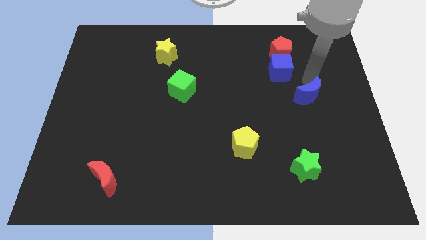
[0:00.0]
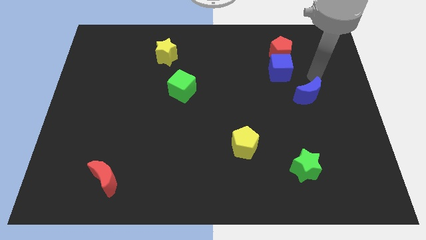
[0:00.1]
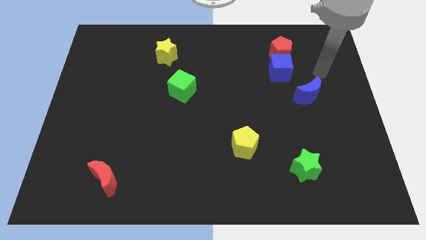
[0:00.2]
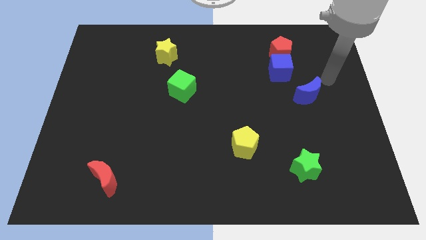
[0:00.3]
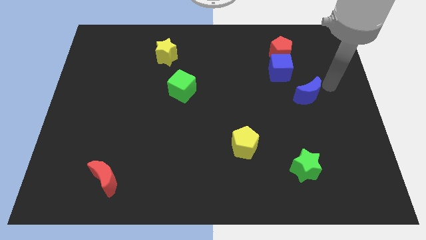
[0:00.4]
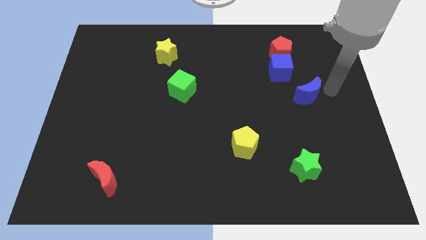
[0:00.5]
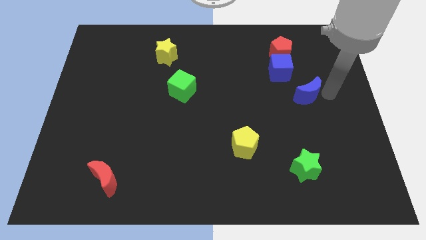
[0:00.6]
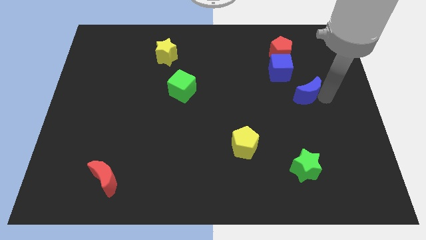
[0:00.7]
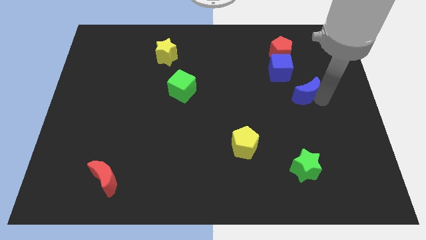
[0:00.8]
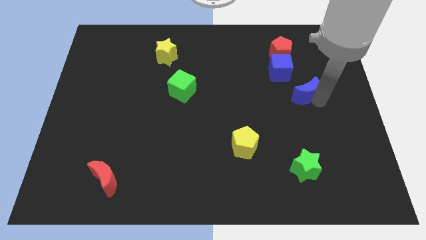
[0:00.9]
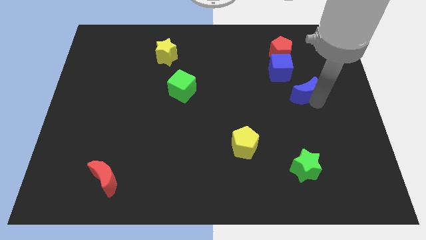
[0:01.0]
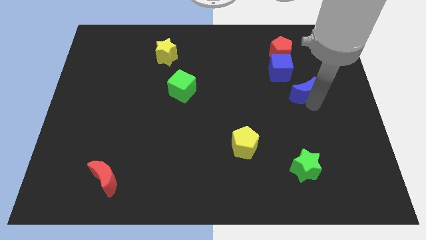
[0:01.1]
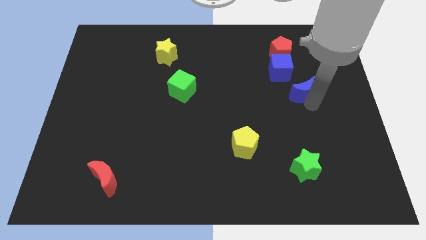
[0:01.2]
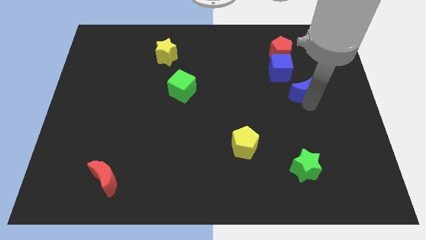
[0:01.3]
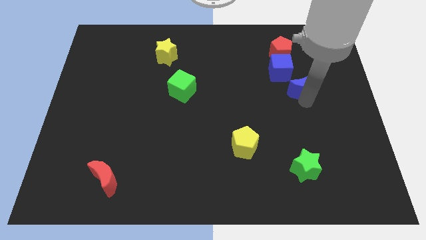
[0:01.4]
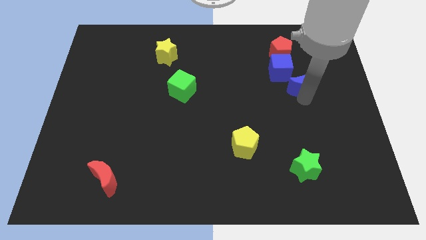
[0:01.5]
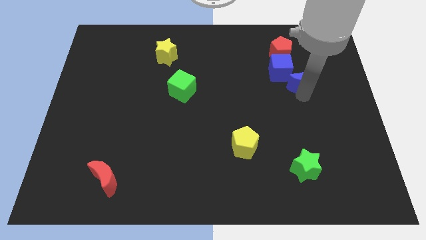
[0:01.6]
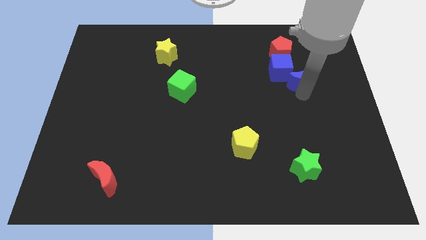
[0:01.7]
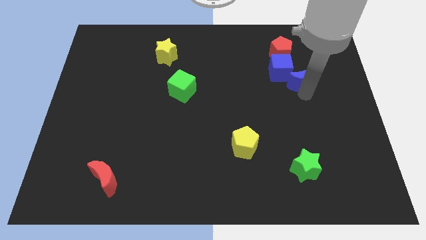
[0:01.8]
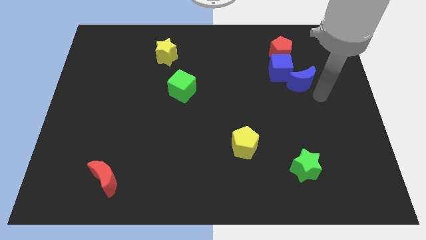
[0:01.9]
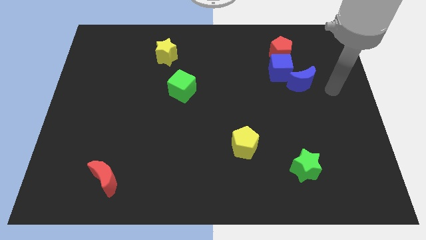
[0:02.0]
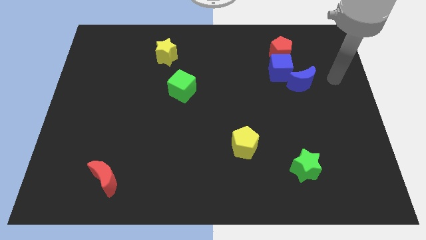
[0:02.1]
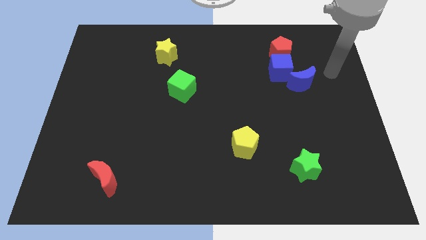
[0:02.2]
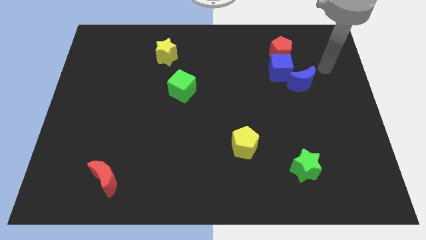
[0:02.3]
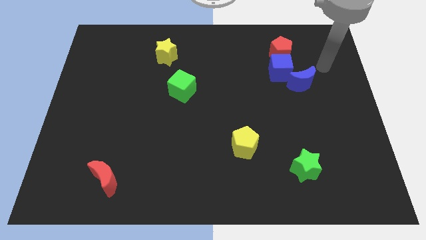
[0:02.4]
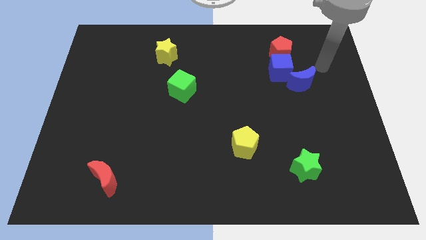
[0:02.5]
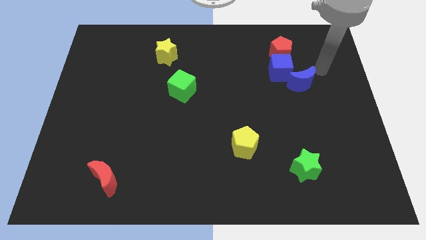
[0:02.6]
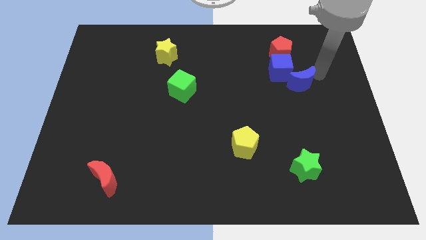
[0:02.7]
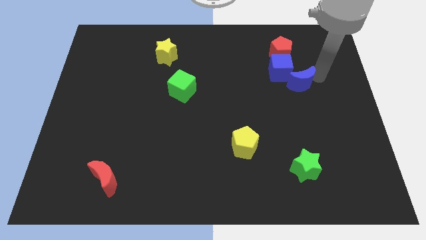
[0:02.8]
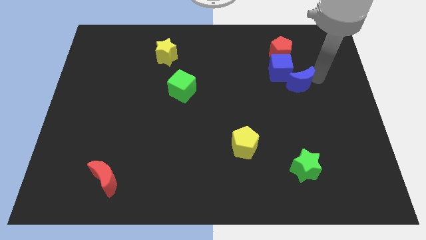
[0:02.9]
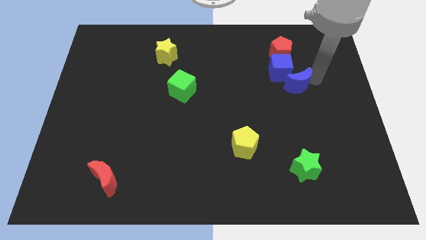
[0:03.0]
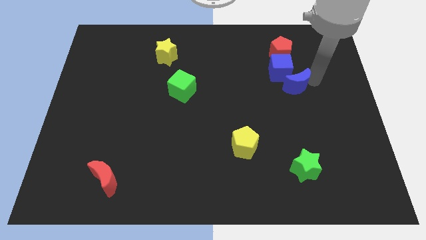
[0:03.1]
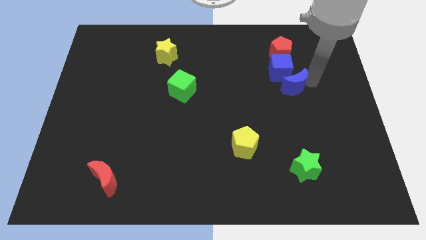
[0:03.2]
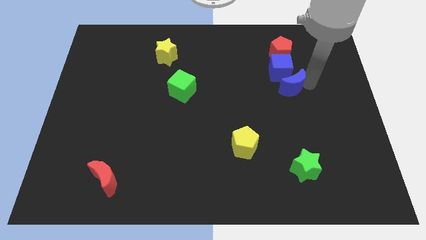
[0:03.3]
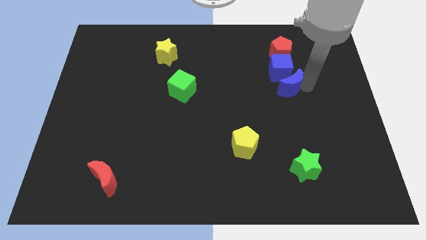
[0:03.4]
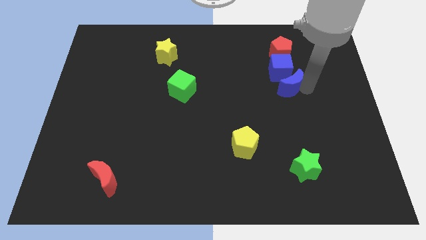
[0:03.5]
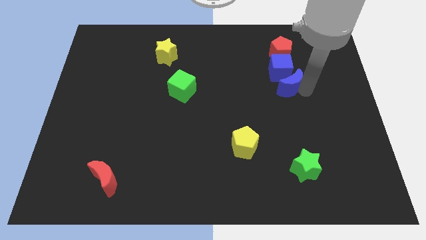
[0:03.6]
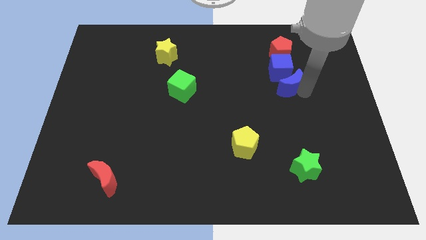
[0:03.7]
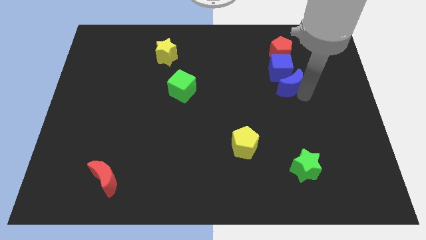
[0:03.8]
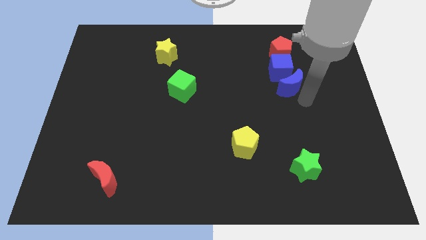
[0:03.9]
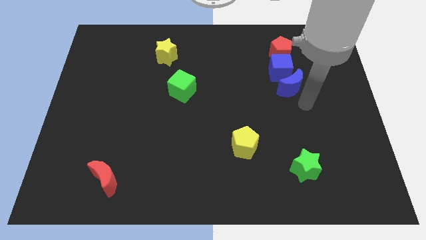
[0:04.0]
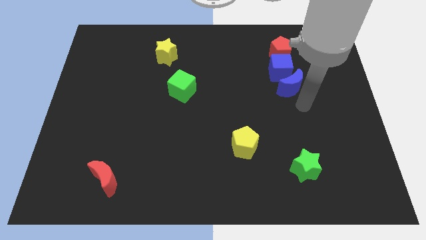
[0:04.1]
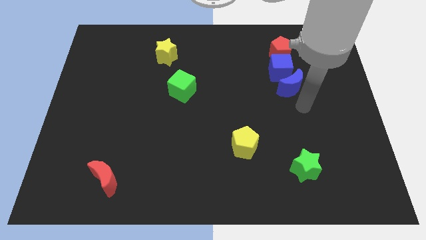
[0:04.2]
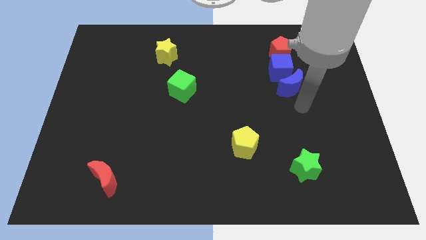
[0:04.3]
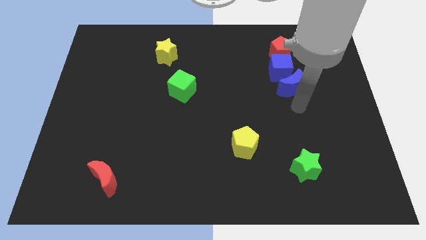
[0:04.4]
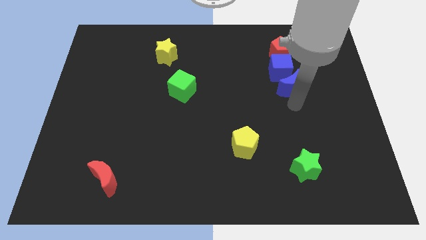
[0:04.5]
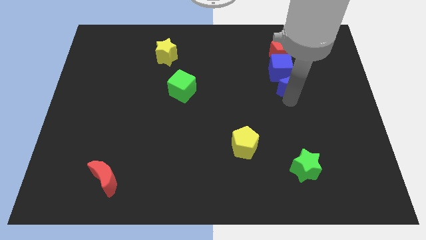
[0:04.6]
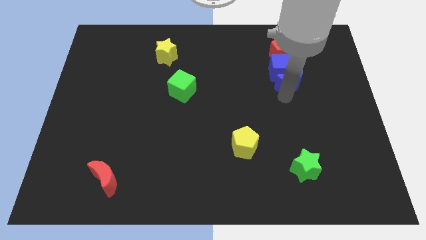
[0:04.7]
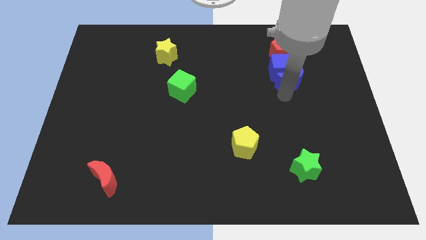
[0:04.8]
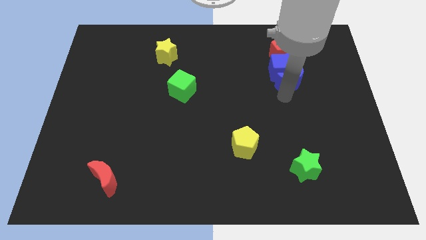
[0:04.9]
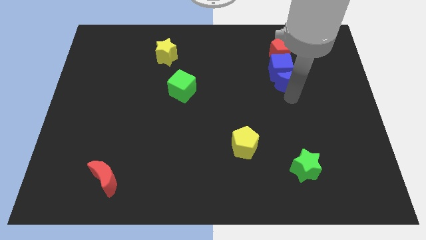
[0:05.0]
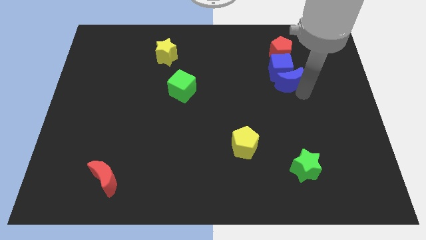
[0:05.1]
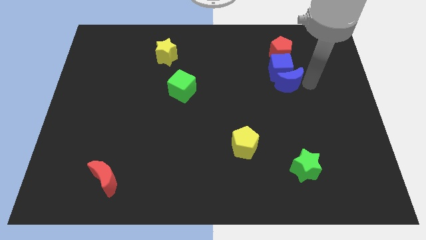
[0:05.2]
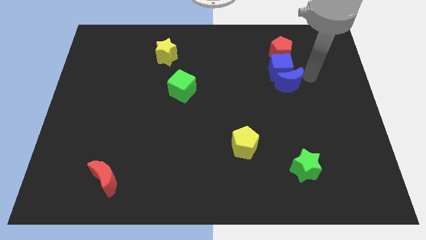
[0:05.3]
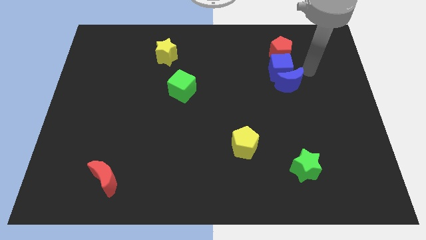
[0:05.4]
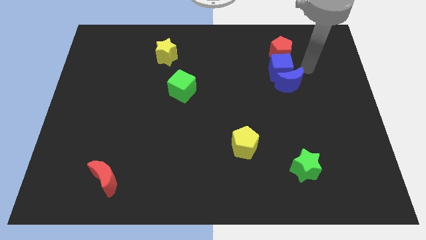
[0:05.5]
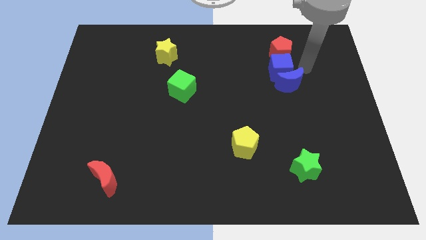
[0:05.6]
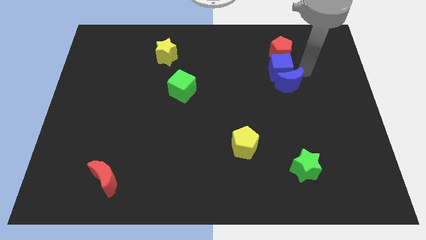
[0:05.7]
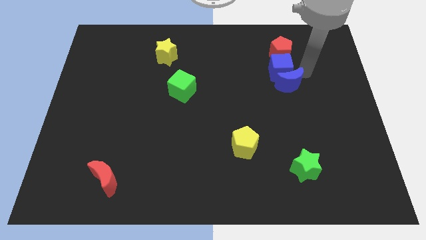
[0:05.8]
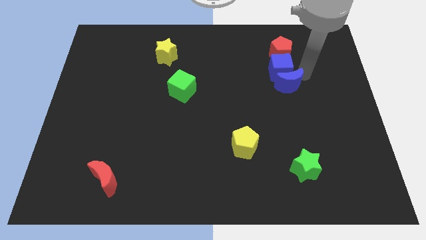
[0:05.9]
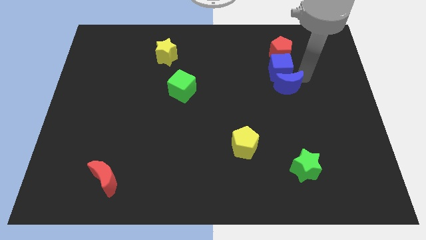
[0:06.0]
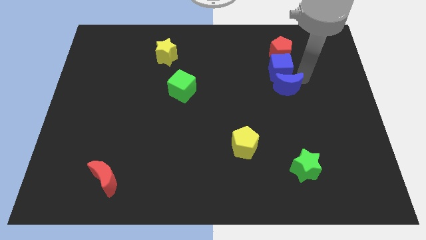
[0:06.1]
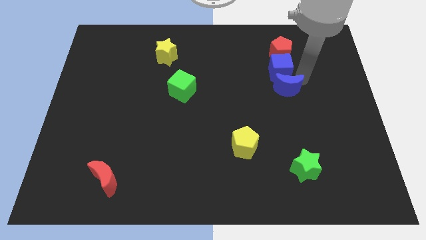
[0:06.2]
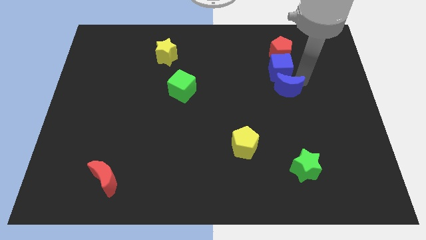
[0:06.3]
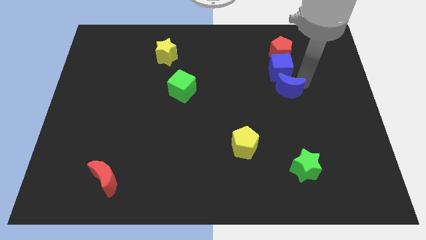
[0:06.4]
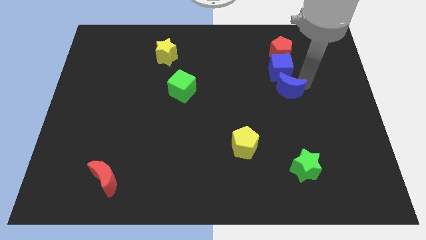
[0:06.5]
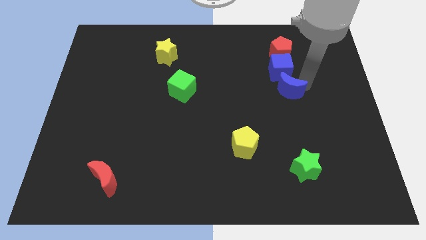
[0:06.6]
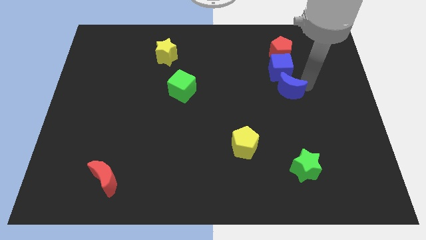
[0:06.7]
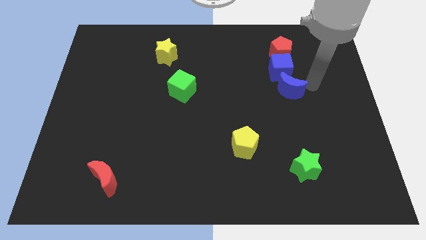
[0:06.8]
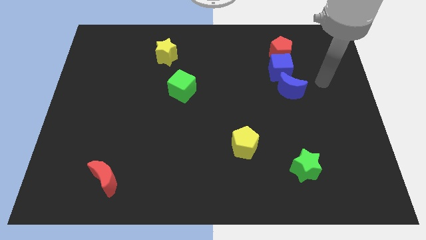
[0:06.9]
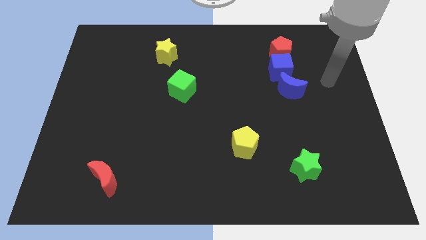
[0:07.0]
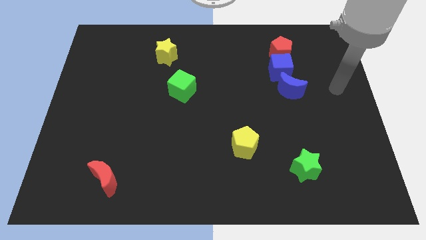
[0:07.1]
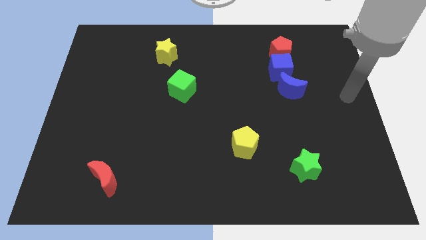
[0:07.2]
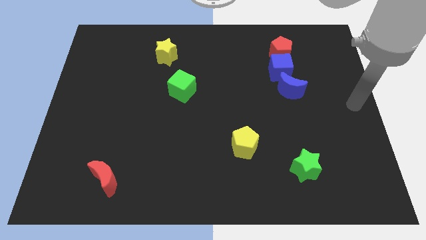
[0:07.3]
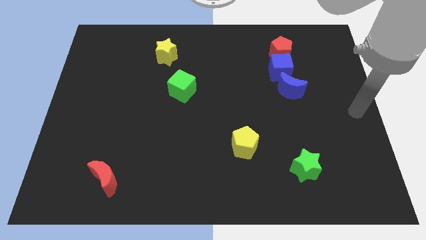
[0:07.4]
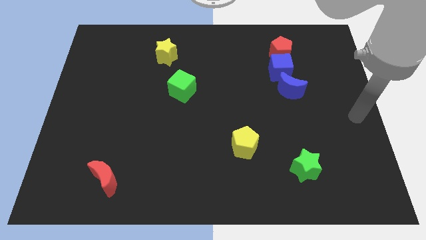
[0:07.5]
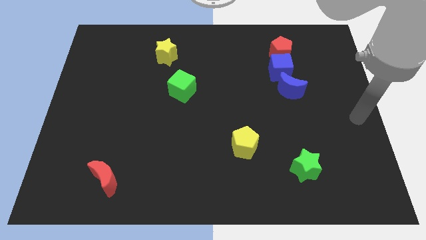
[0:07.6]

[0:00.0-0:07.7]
put the blue crescent vertically below the blue cube

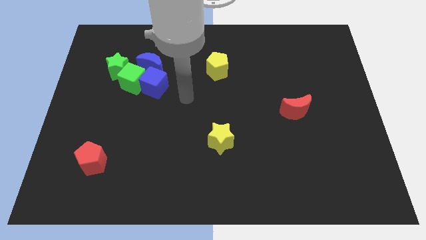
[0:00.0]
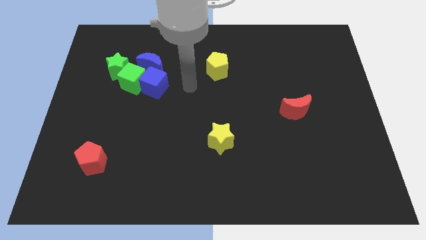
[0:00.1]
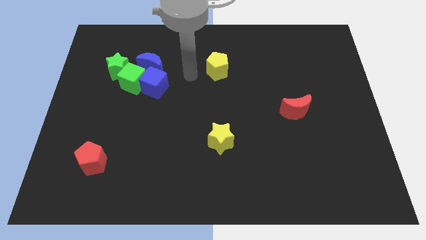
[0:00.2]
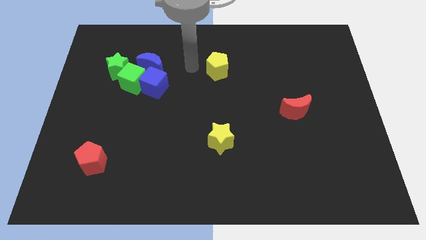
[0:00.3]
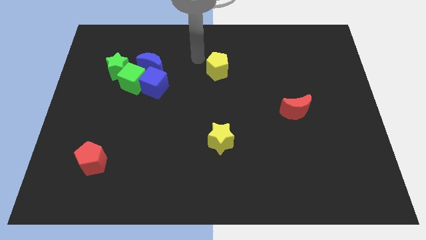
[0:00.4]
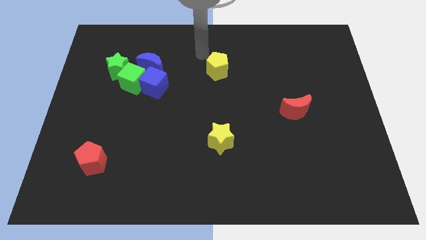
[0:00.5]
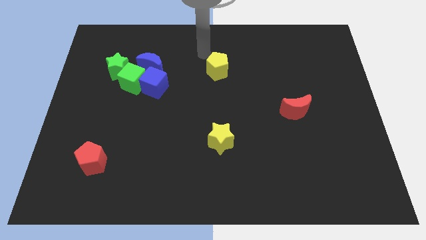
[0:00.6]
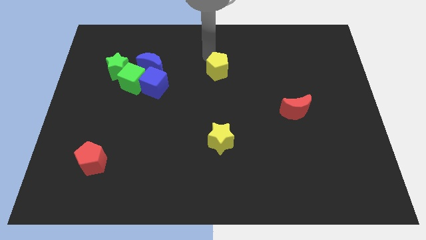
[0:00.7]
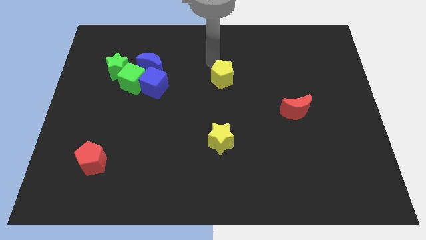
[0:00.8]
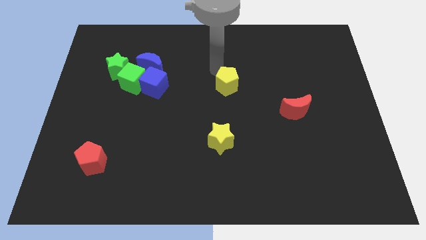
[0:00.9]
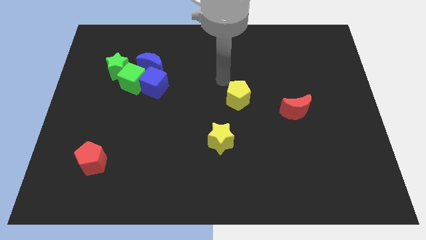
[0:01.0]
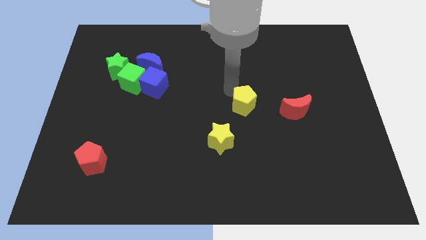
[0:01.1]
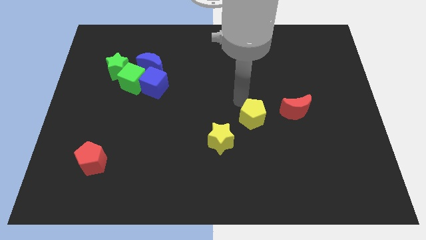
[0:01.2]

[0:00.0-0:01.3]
move the yellow pentagon left to the red moon
